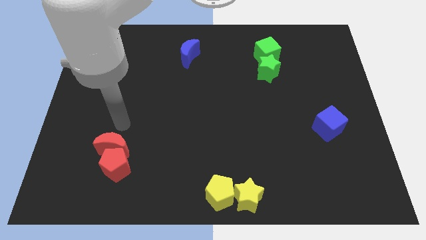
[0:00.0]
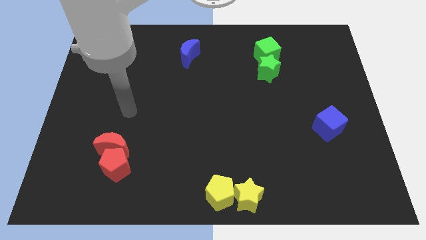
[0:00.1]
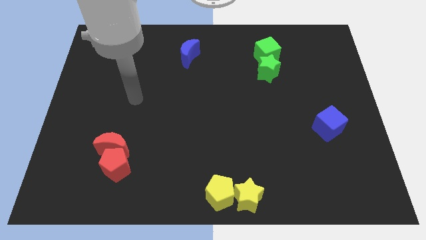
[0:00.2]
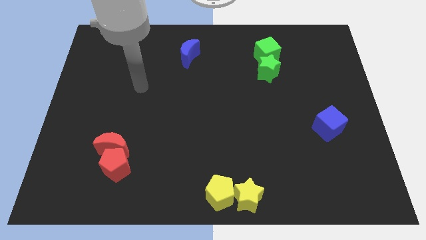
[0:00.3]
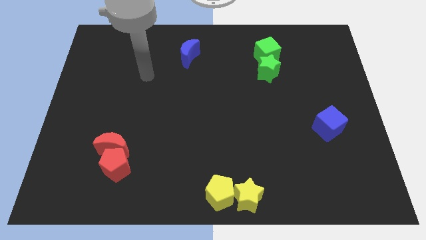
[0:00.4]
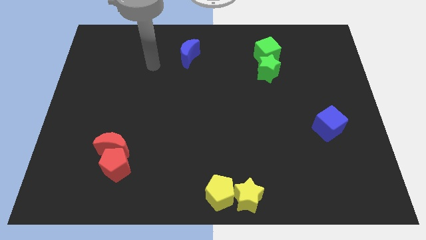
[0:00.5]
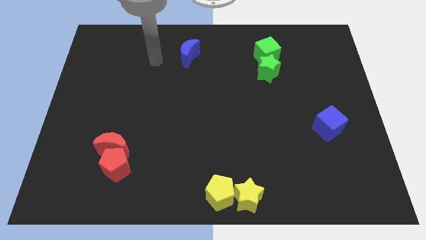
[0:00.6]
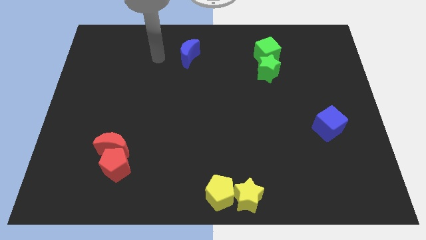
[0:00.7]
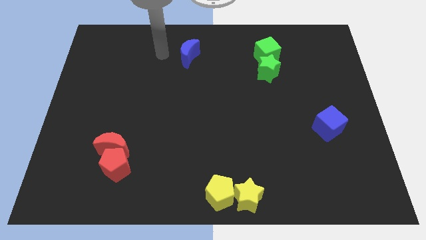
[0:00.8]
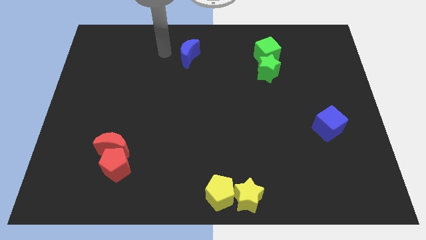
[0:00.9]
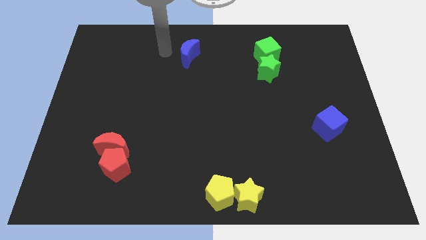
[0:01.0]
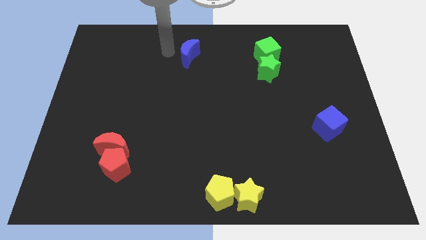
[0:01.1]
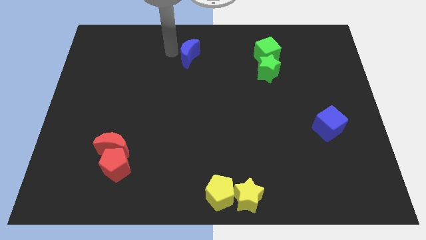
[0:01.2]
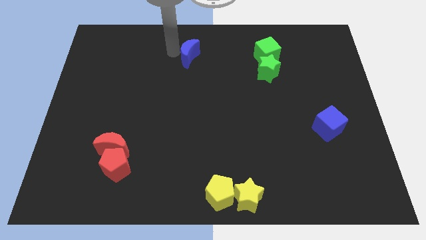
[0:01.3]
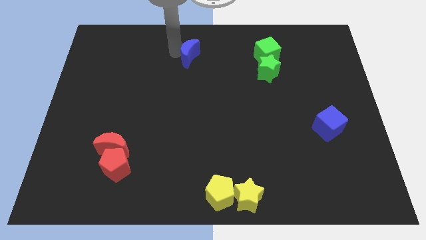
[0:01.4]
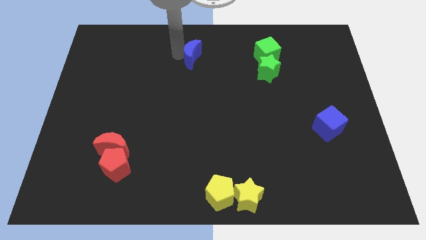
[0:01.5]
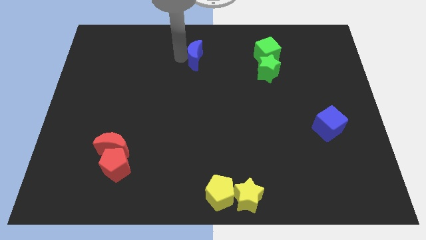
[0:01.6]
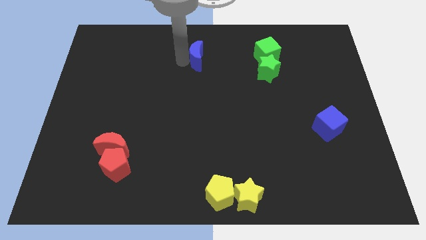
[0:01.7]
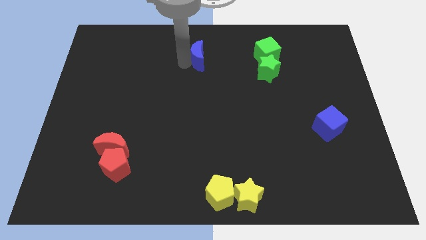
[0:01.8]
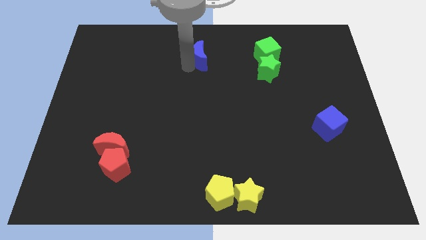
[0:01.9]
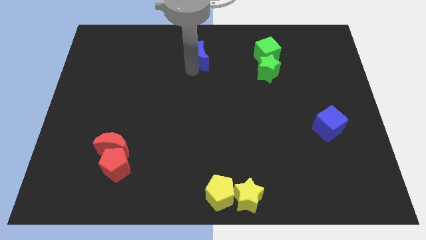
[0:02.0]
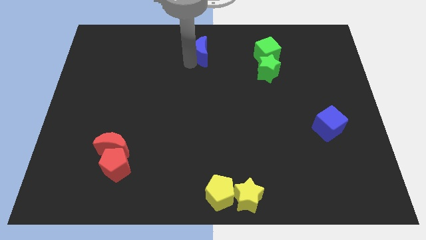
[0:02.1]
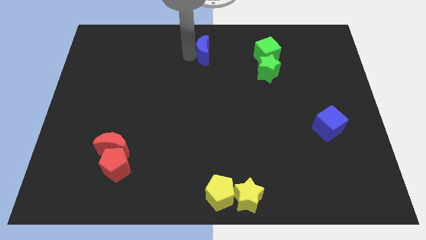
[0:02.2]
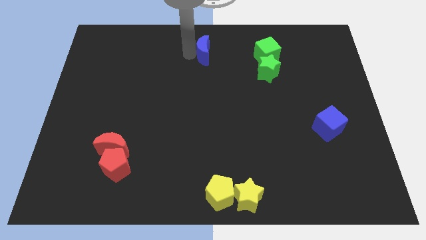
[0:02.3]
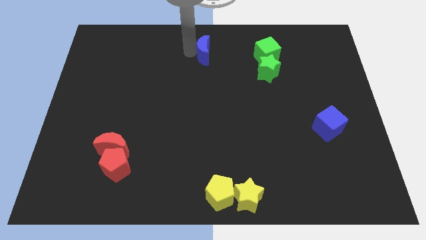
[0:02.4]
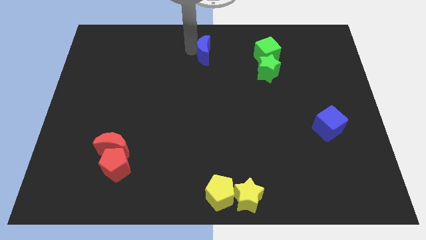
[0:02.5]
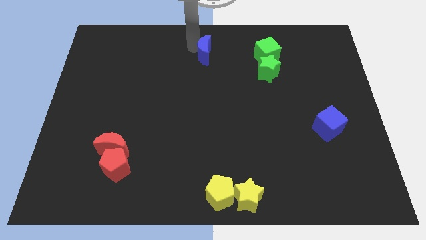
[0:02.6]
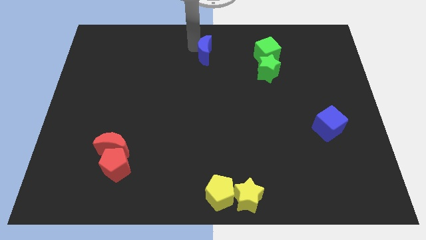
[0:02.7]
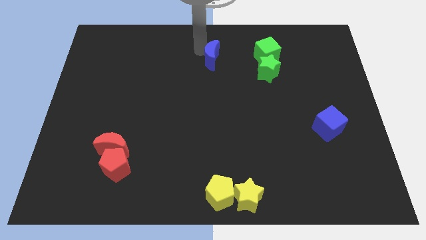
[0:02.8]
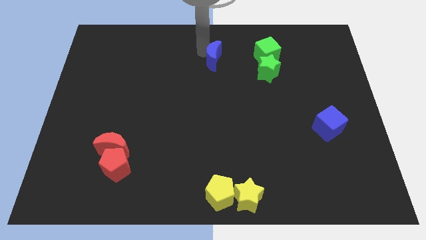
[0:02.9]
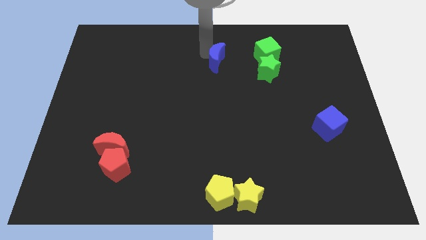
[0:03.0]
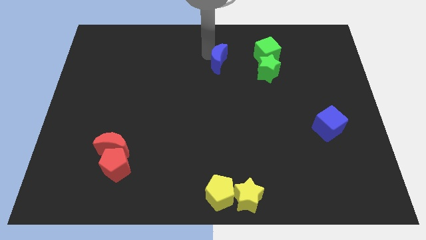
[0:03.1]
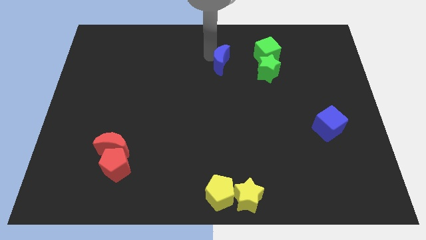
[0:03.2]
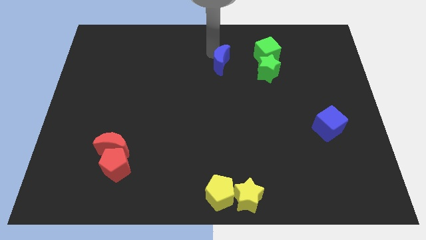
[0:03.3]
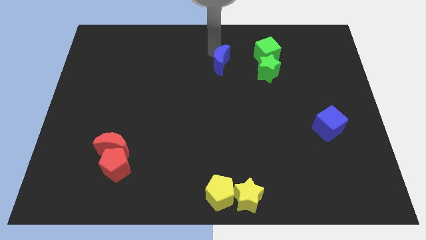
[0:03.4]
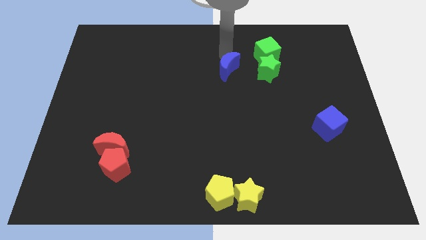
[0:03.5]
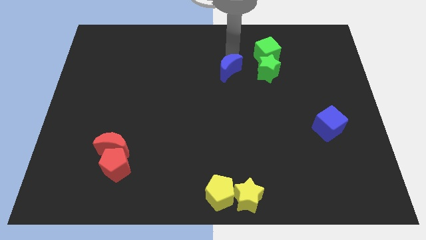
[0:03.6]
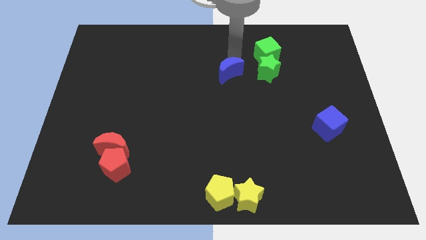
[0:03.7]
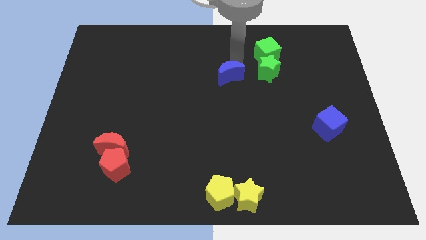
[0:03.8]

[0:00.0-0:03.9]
push the blue crescent towards the green star

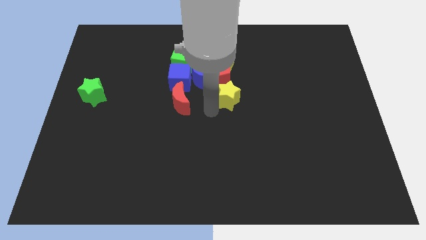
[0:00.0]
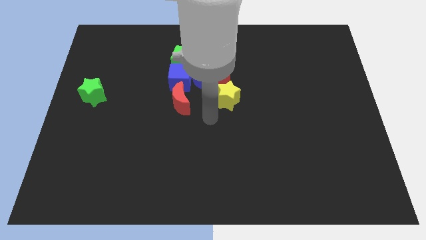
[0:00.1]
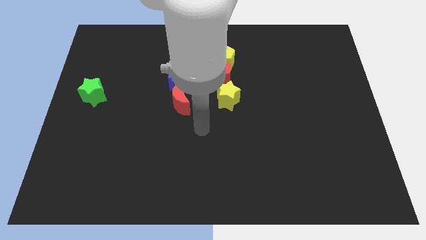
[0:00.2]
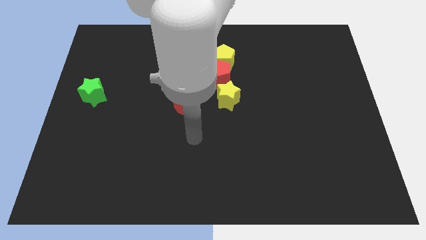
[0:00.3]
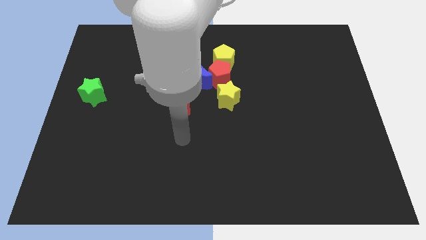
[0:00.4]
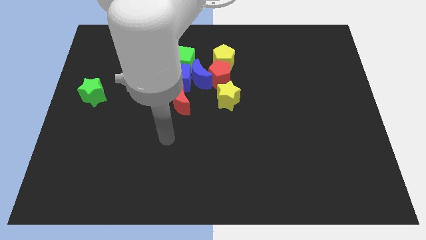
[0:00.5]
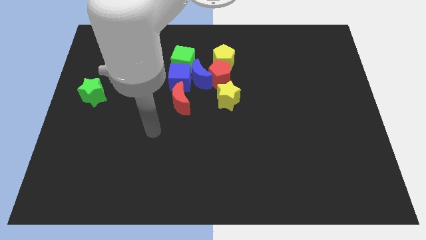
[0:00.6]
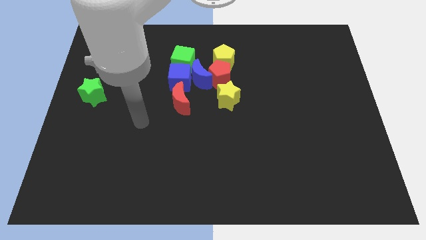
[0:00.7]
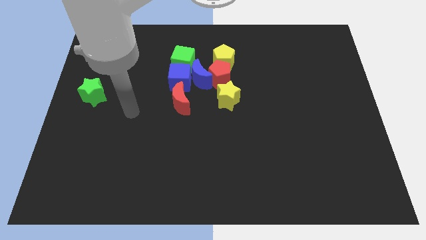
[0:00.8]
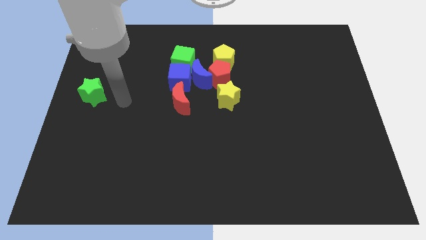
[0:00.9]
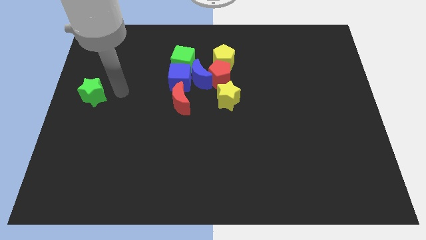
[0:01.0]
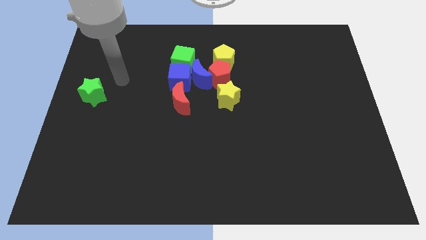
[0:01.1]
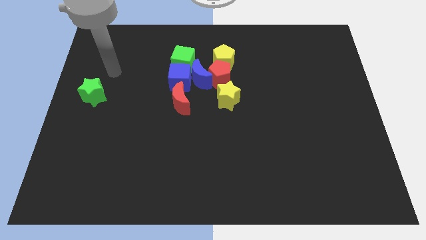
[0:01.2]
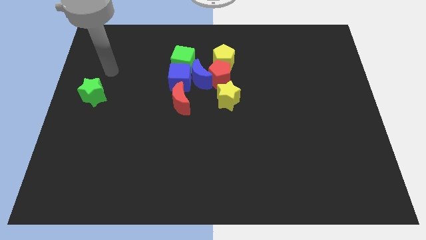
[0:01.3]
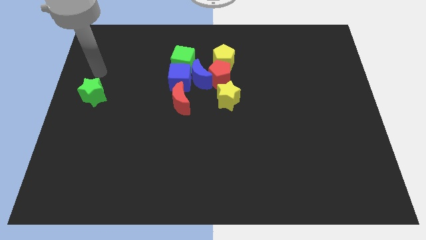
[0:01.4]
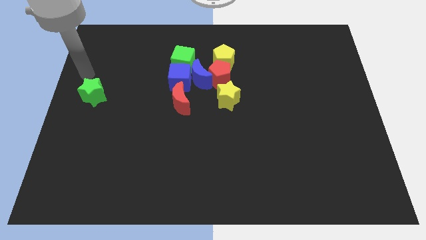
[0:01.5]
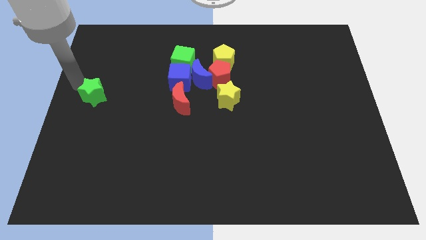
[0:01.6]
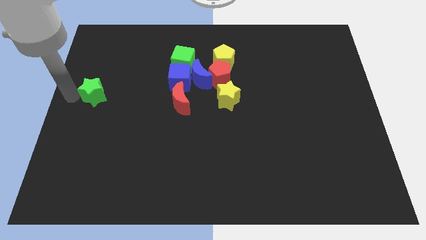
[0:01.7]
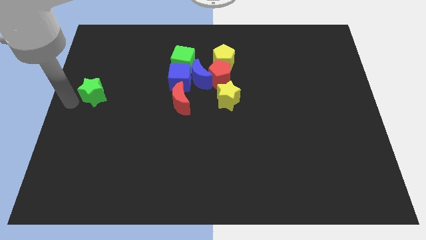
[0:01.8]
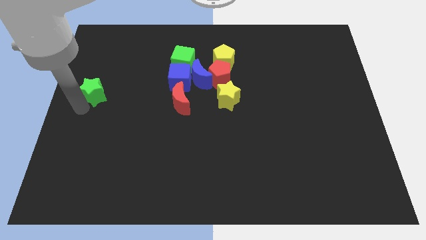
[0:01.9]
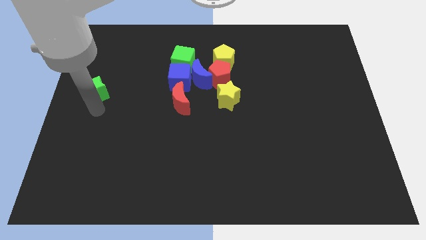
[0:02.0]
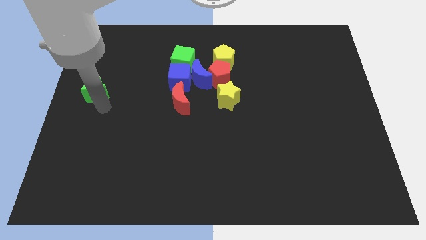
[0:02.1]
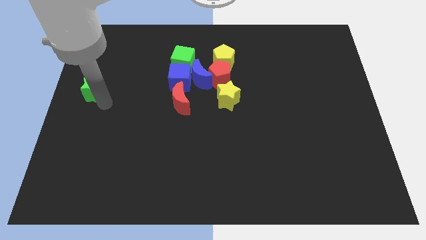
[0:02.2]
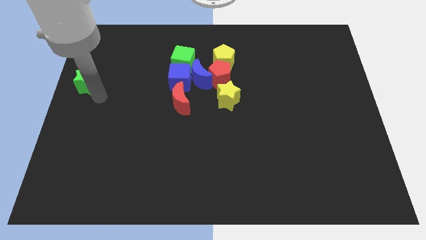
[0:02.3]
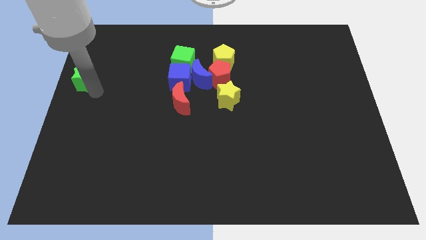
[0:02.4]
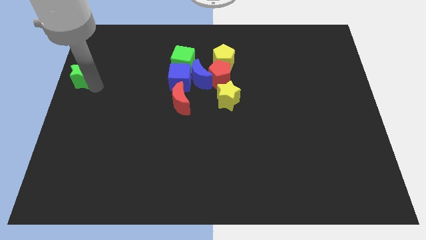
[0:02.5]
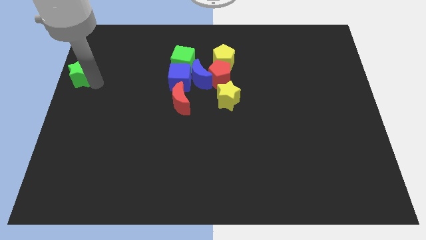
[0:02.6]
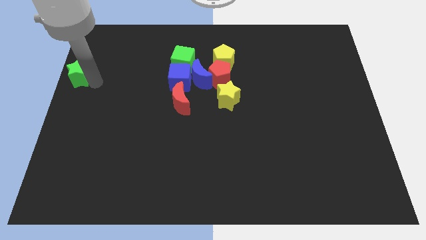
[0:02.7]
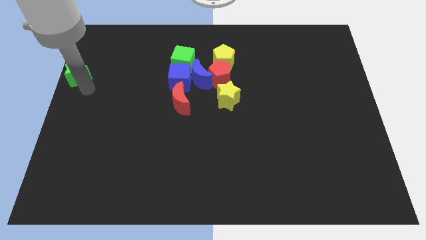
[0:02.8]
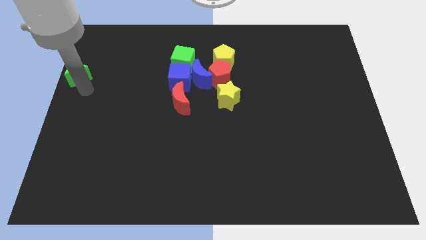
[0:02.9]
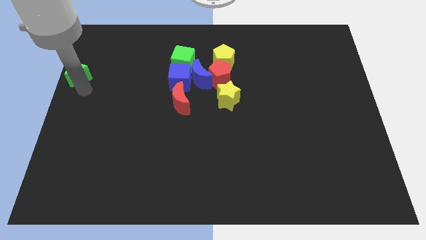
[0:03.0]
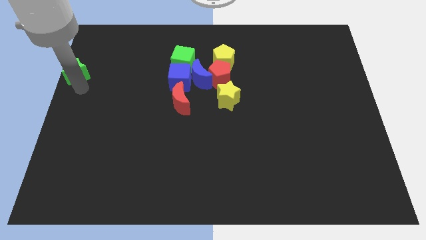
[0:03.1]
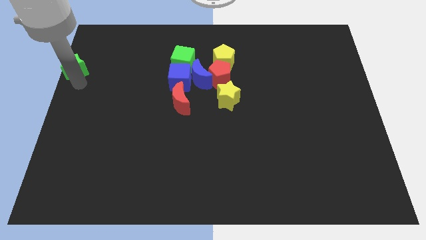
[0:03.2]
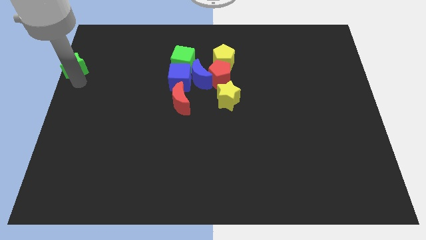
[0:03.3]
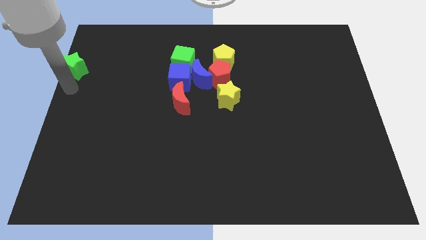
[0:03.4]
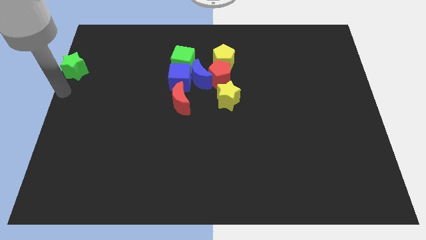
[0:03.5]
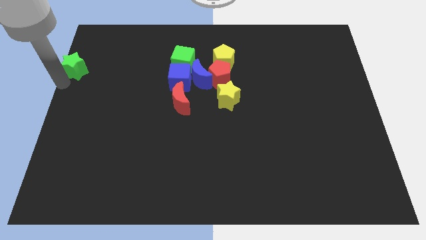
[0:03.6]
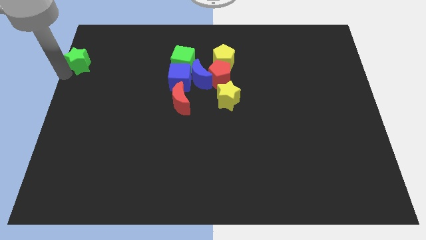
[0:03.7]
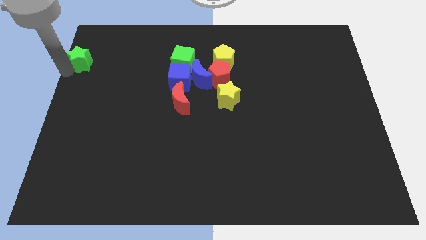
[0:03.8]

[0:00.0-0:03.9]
push the green star to the top left of the table

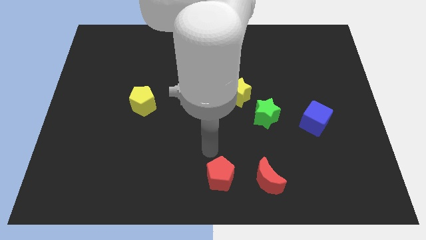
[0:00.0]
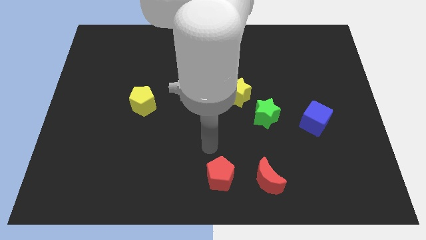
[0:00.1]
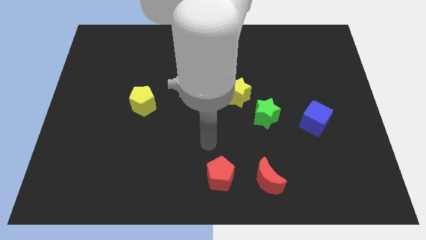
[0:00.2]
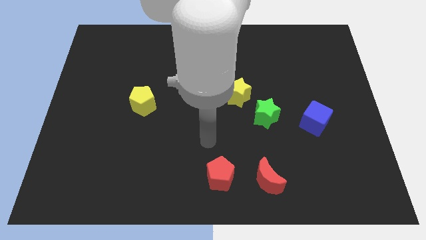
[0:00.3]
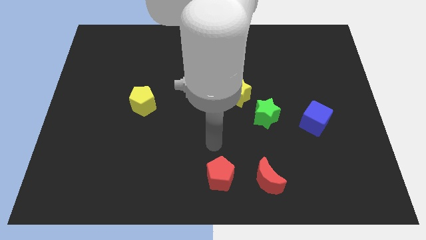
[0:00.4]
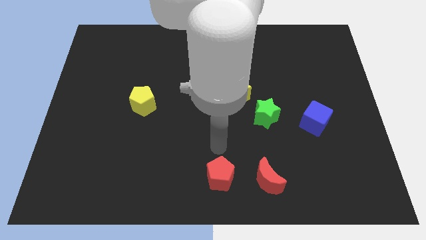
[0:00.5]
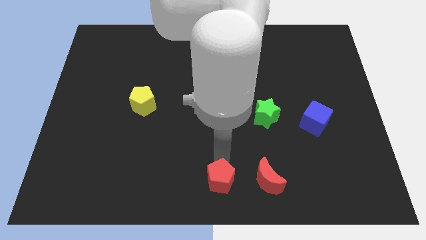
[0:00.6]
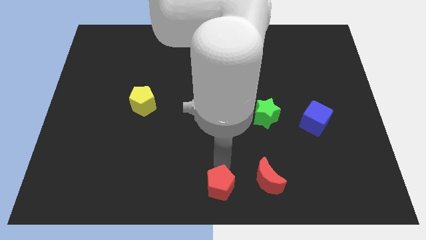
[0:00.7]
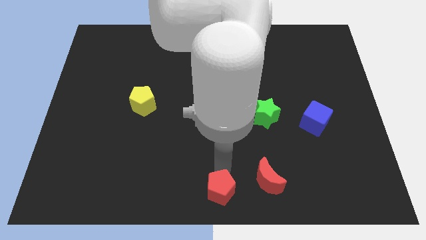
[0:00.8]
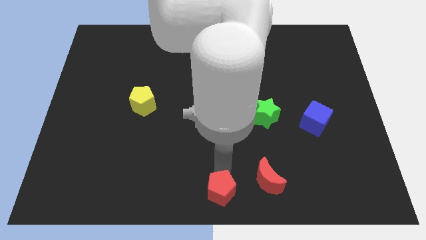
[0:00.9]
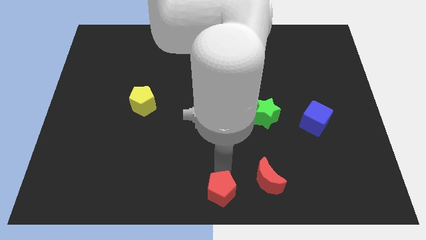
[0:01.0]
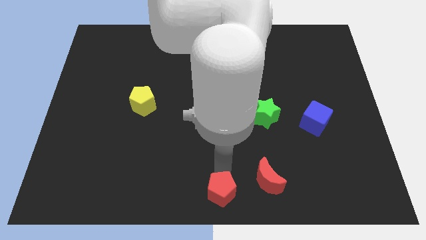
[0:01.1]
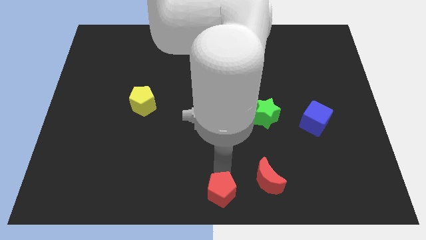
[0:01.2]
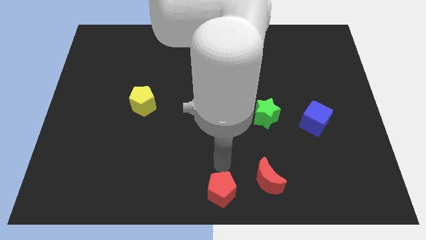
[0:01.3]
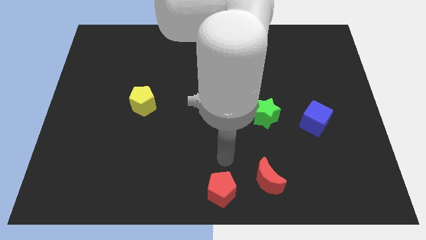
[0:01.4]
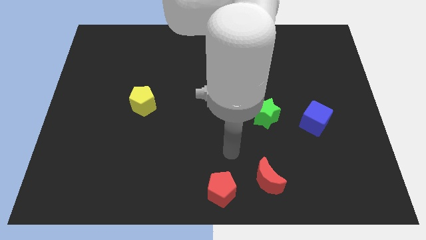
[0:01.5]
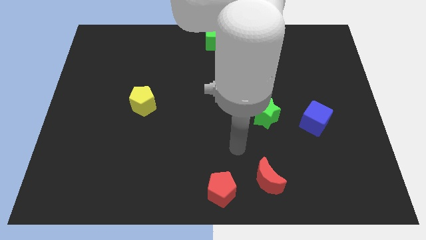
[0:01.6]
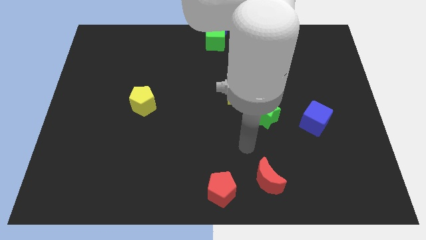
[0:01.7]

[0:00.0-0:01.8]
adjust the red pentagon at the bottom center of the board
